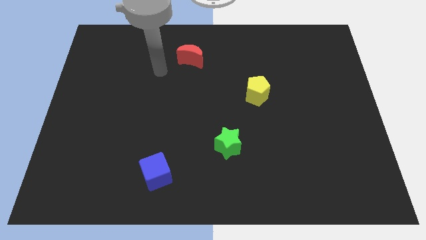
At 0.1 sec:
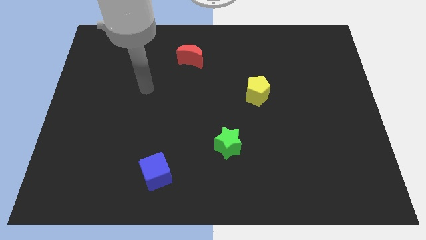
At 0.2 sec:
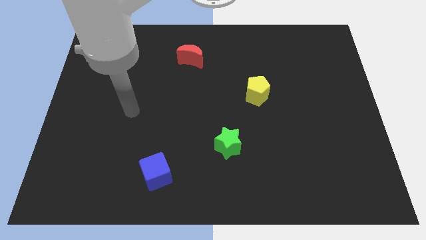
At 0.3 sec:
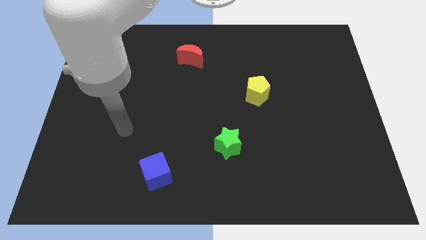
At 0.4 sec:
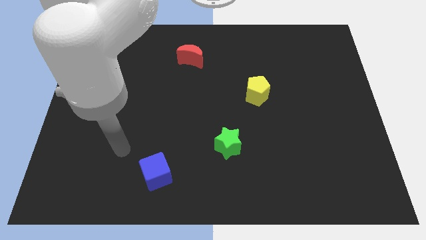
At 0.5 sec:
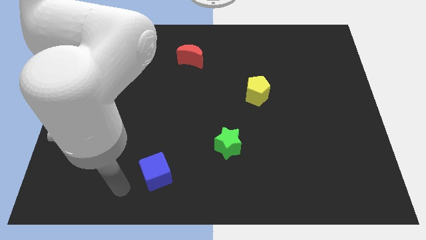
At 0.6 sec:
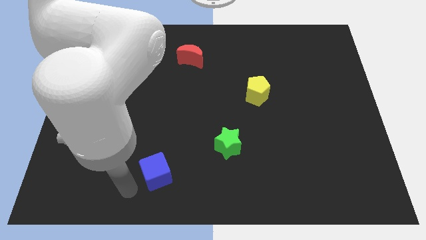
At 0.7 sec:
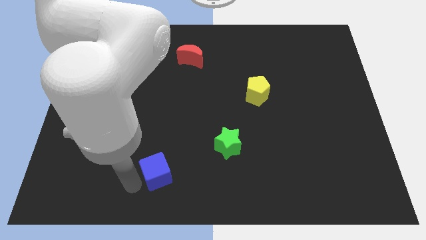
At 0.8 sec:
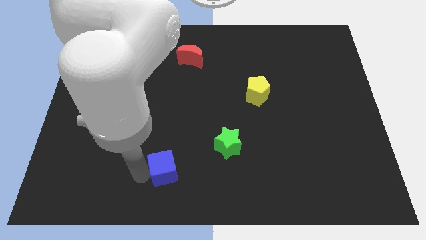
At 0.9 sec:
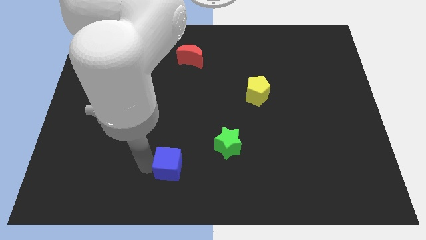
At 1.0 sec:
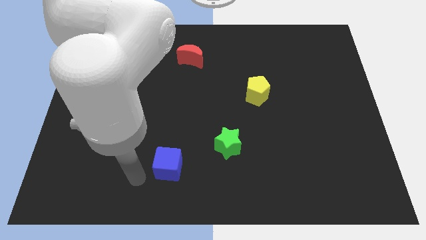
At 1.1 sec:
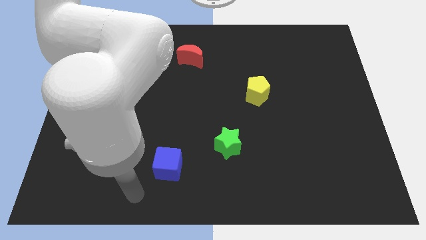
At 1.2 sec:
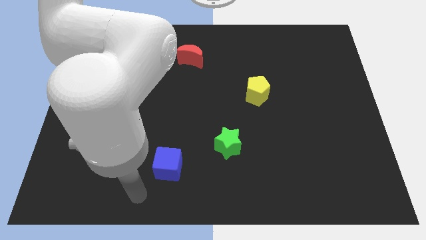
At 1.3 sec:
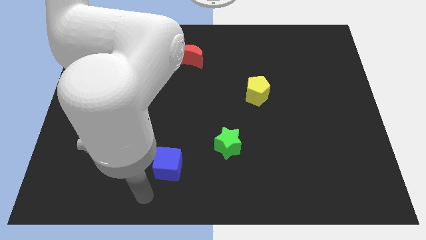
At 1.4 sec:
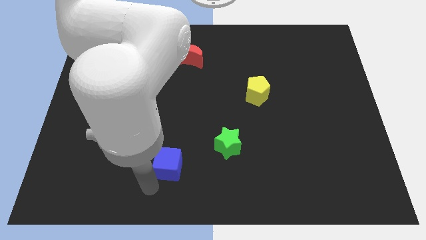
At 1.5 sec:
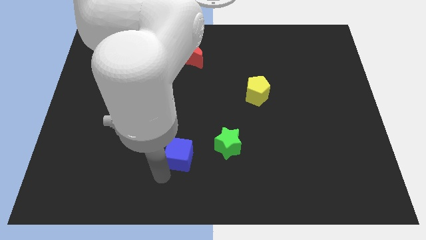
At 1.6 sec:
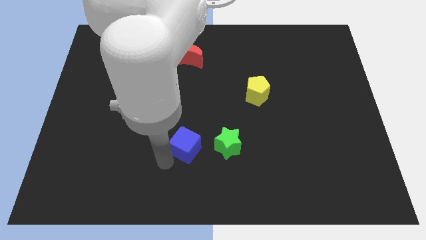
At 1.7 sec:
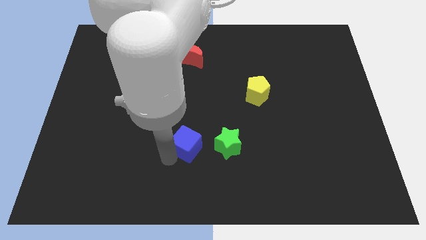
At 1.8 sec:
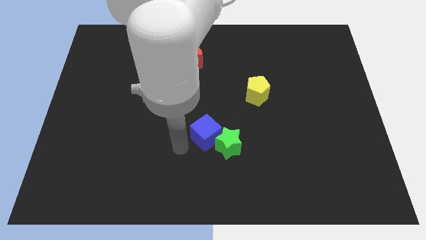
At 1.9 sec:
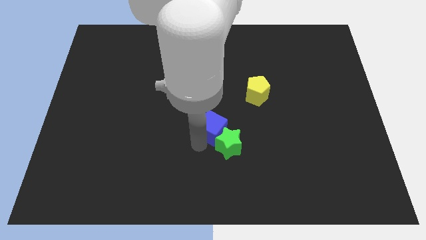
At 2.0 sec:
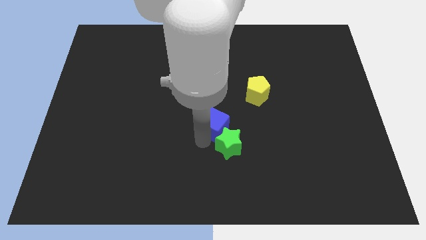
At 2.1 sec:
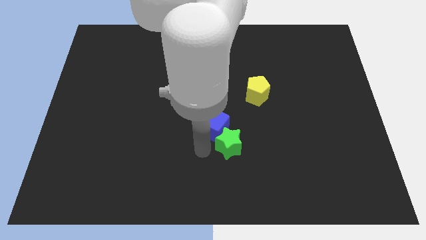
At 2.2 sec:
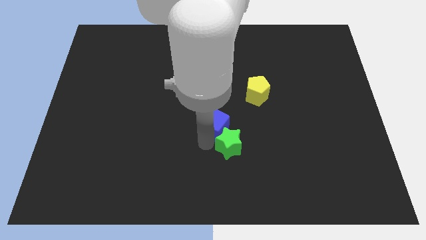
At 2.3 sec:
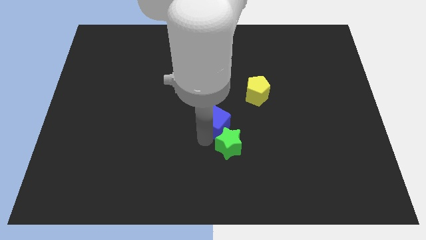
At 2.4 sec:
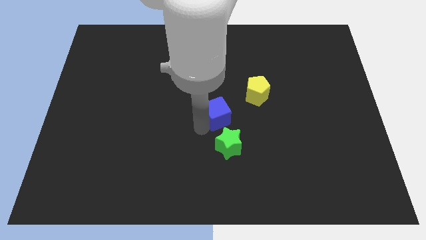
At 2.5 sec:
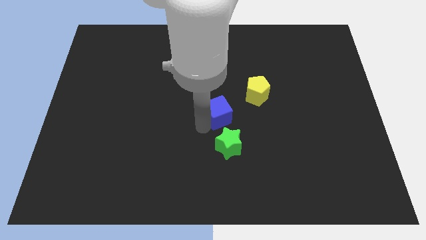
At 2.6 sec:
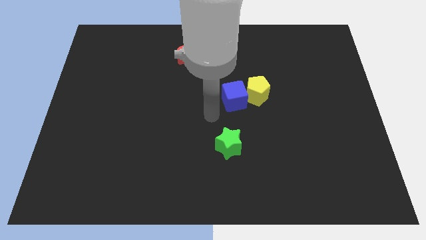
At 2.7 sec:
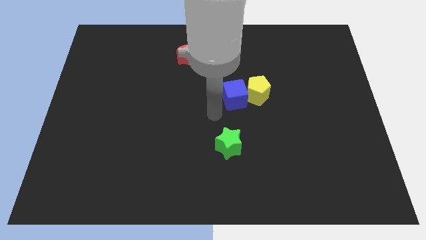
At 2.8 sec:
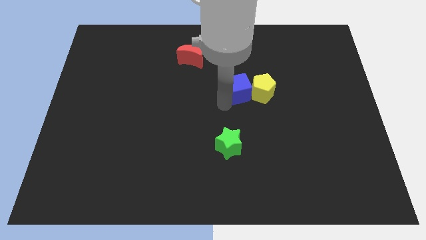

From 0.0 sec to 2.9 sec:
push the cube close to the yellow pentagon

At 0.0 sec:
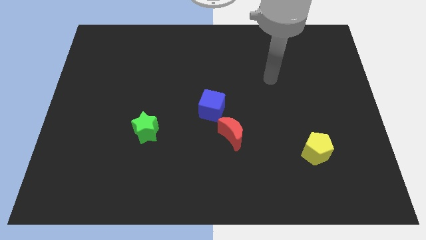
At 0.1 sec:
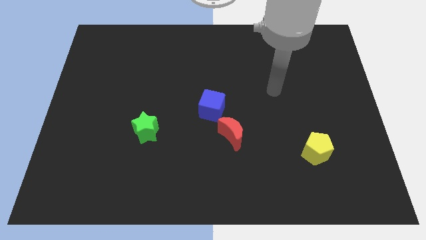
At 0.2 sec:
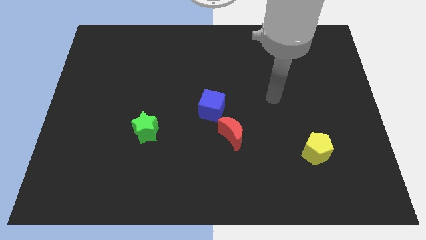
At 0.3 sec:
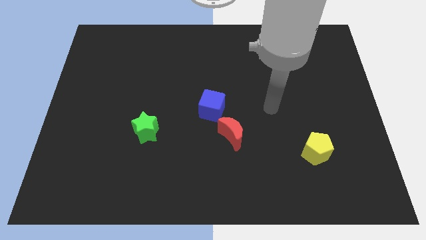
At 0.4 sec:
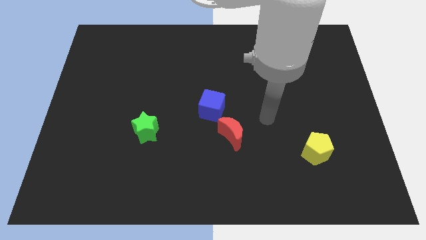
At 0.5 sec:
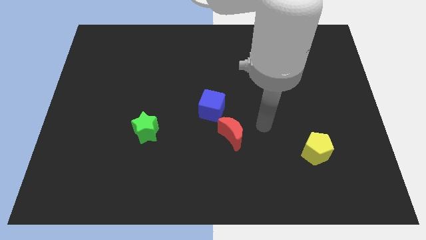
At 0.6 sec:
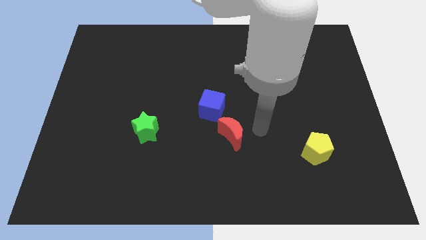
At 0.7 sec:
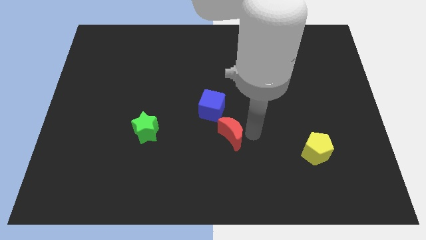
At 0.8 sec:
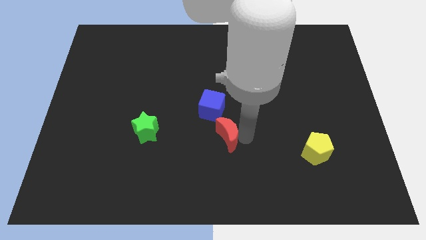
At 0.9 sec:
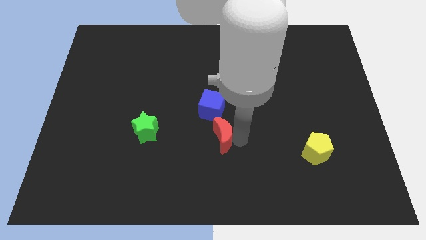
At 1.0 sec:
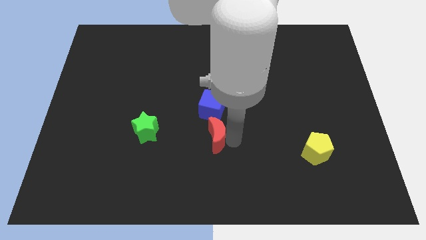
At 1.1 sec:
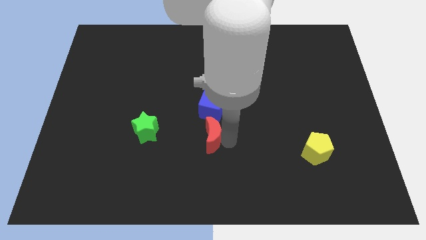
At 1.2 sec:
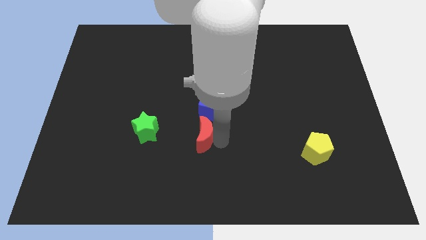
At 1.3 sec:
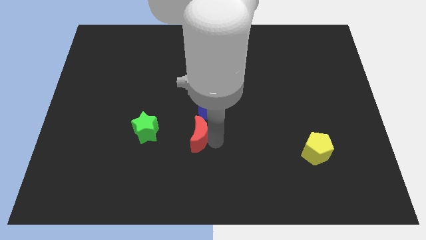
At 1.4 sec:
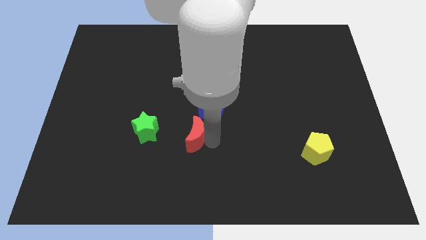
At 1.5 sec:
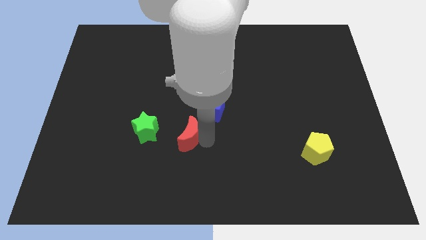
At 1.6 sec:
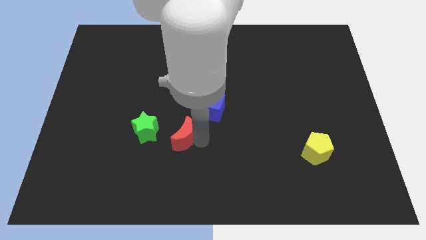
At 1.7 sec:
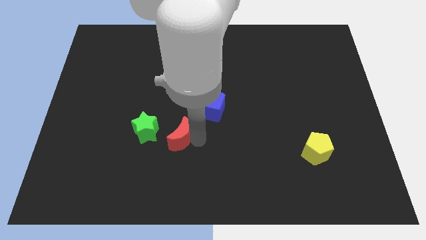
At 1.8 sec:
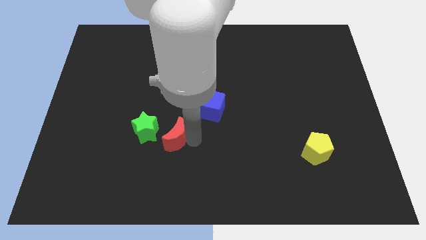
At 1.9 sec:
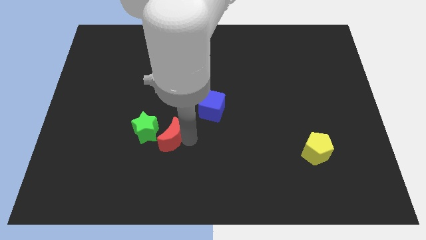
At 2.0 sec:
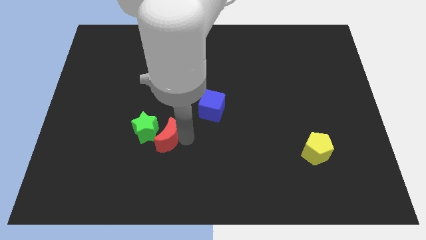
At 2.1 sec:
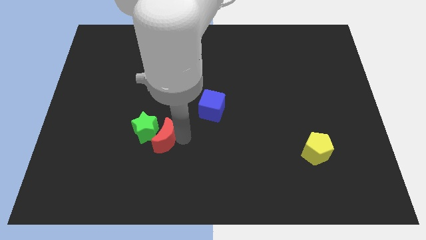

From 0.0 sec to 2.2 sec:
move the red moon towards the star

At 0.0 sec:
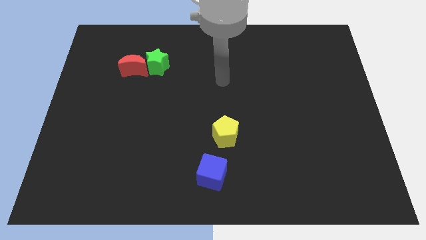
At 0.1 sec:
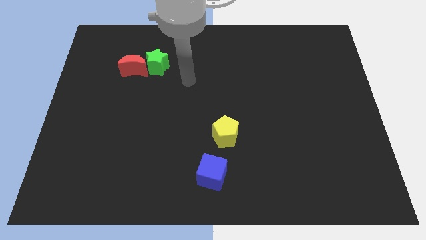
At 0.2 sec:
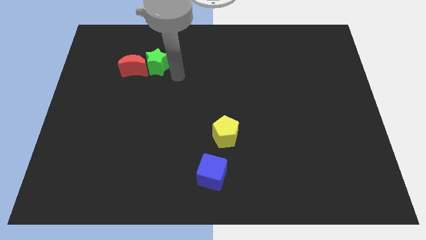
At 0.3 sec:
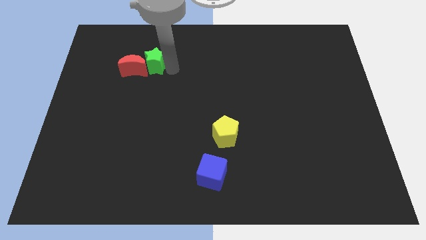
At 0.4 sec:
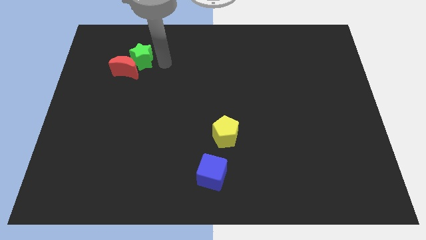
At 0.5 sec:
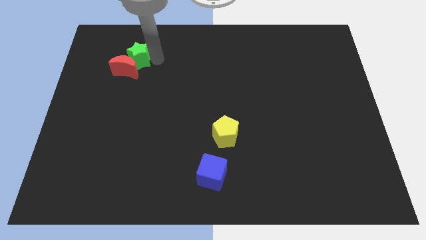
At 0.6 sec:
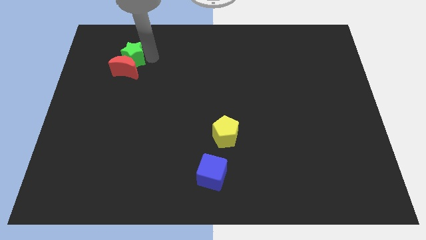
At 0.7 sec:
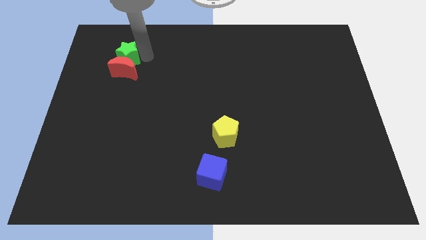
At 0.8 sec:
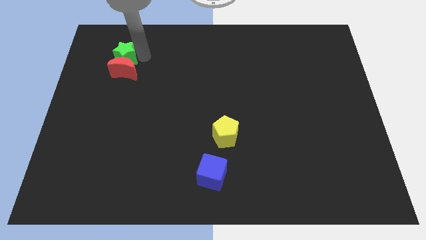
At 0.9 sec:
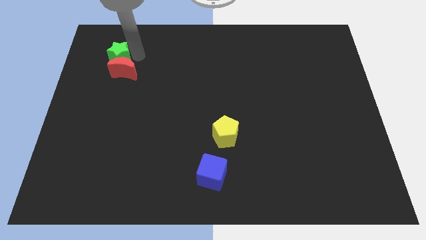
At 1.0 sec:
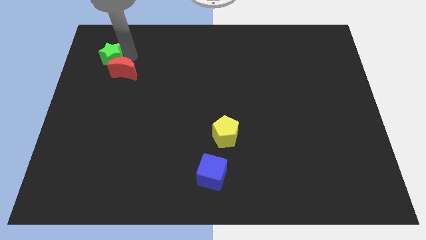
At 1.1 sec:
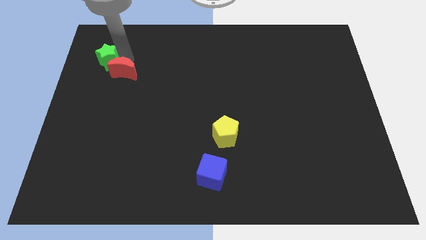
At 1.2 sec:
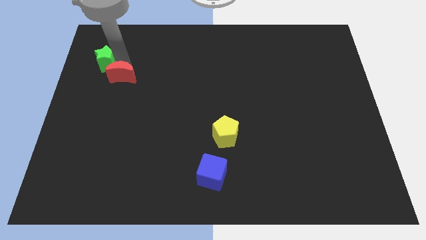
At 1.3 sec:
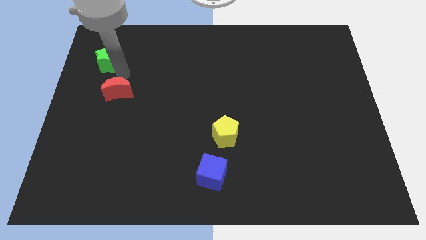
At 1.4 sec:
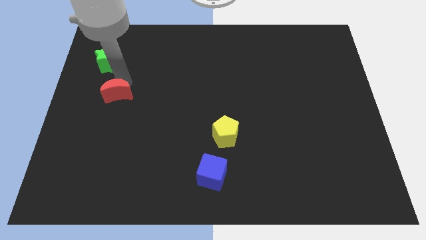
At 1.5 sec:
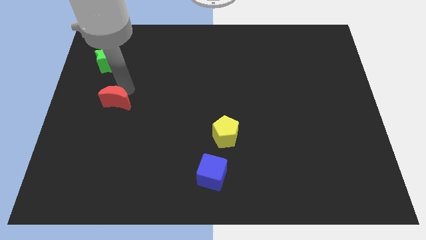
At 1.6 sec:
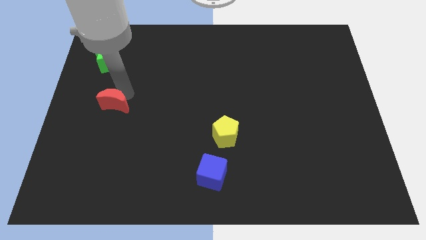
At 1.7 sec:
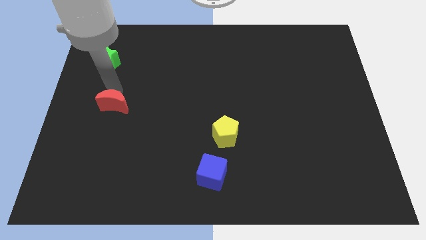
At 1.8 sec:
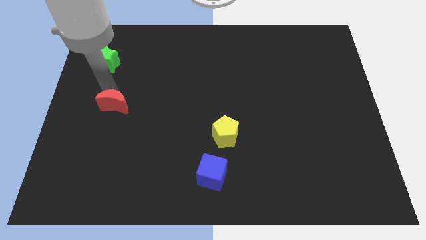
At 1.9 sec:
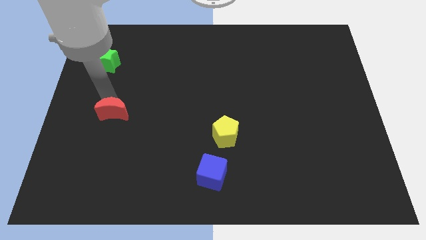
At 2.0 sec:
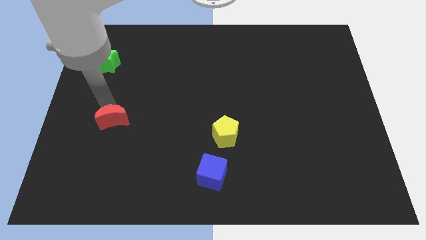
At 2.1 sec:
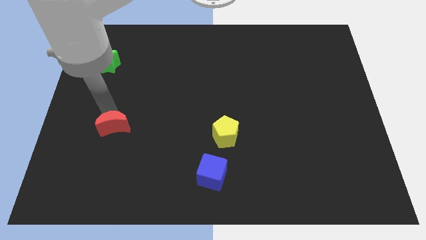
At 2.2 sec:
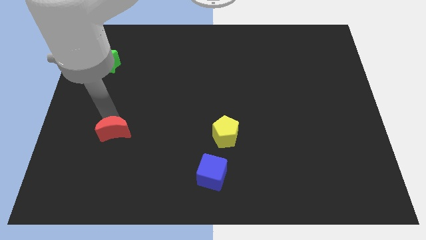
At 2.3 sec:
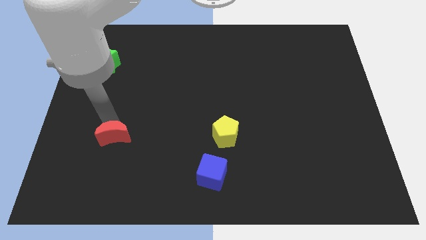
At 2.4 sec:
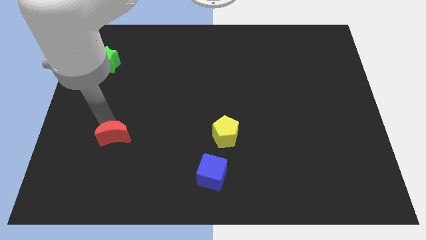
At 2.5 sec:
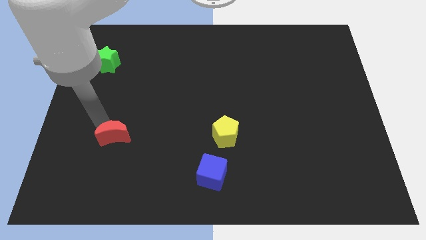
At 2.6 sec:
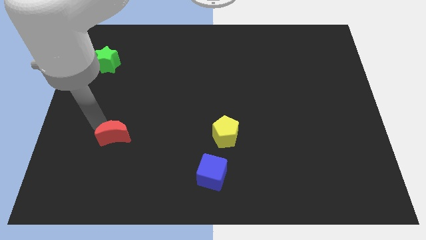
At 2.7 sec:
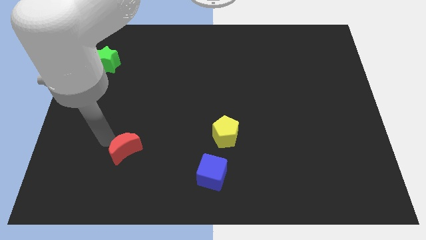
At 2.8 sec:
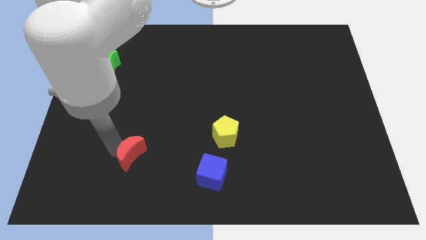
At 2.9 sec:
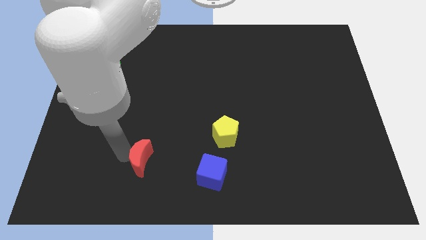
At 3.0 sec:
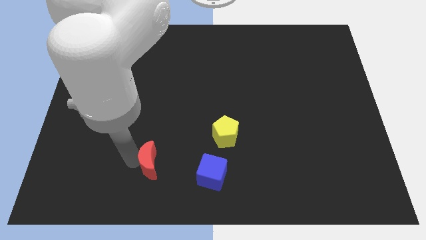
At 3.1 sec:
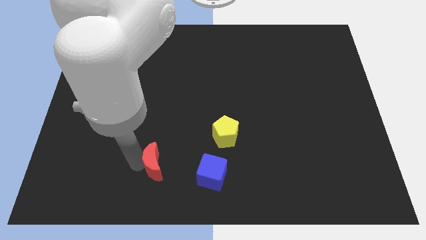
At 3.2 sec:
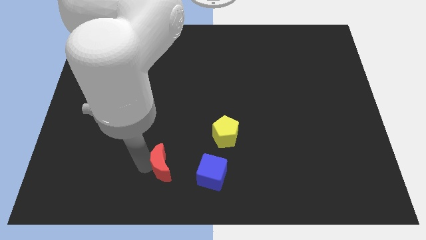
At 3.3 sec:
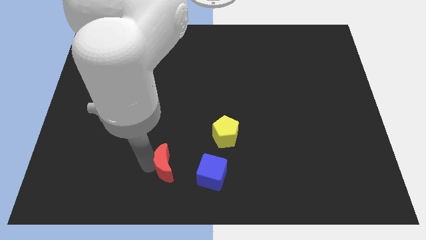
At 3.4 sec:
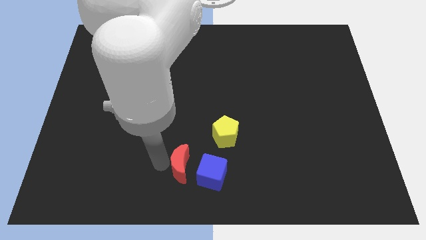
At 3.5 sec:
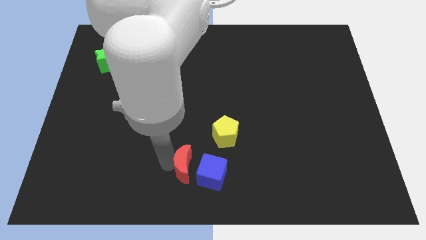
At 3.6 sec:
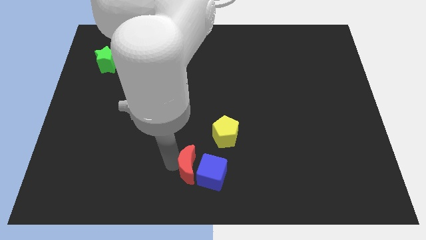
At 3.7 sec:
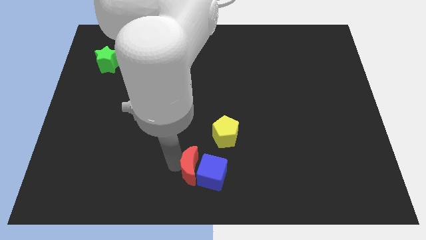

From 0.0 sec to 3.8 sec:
push the red block next to the blue cube
